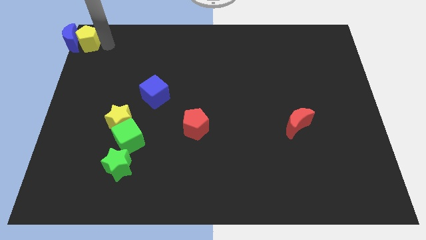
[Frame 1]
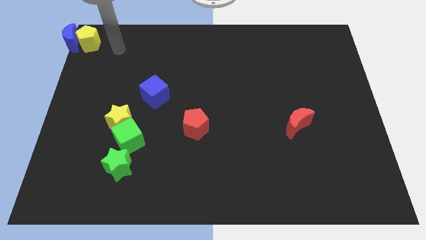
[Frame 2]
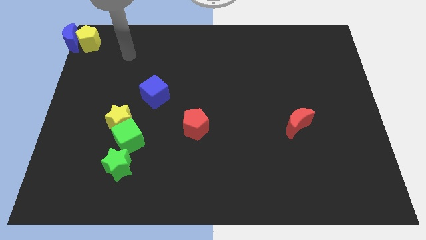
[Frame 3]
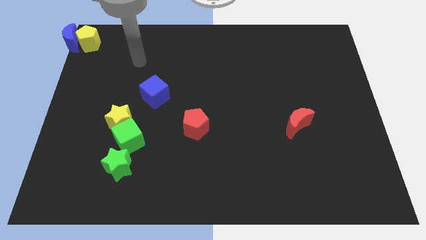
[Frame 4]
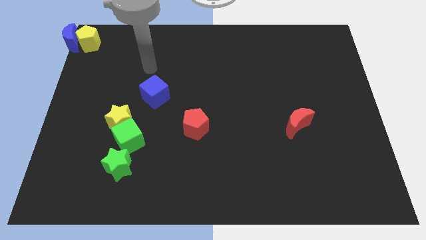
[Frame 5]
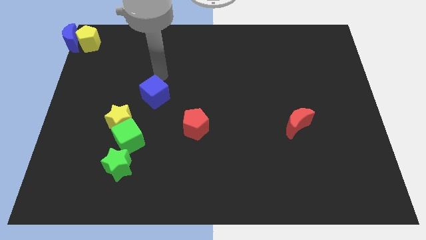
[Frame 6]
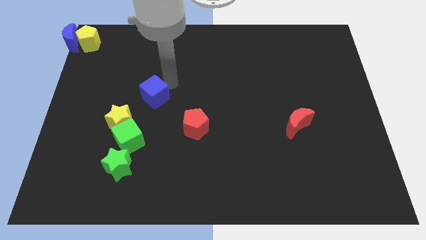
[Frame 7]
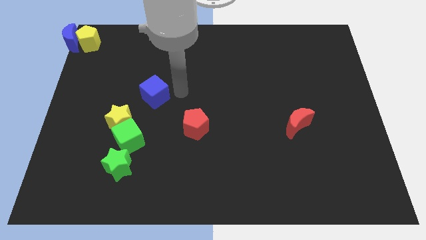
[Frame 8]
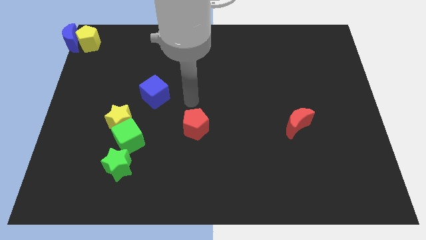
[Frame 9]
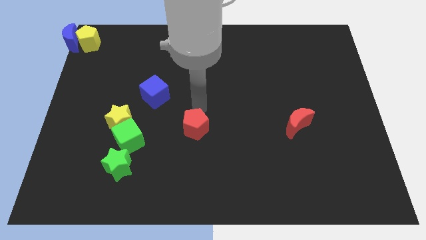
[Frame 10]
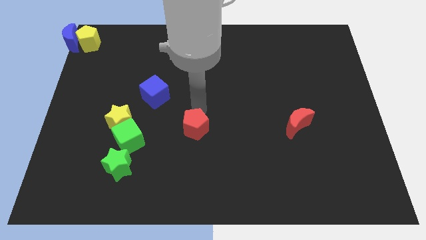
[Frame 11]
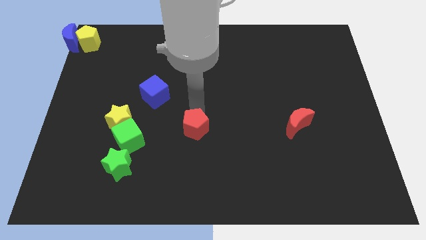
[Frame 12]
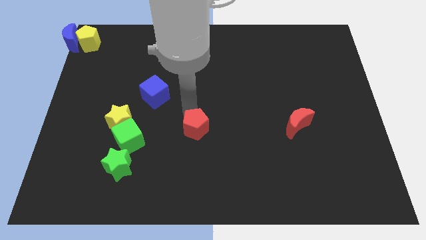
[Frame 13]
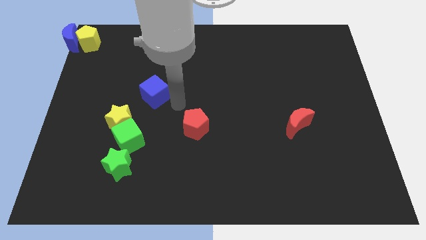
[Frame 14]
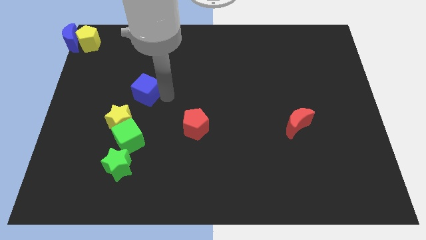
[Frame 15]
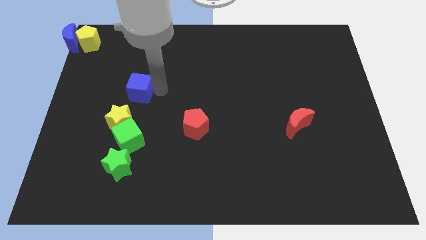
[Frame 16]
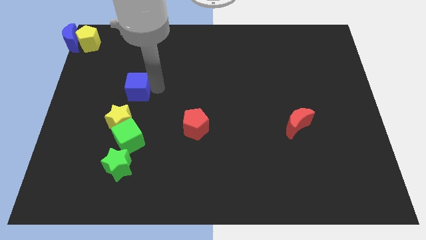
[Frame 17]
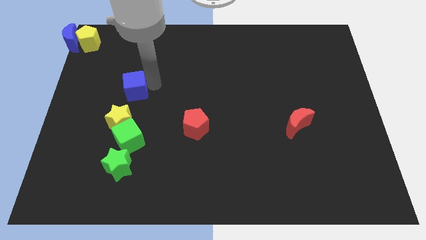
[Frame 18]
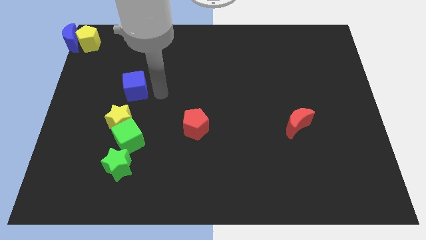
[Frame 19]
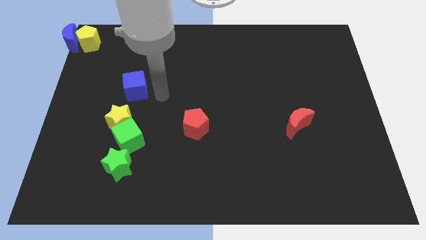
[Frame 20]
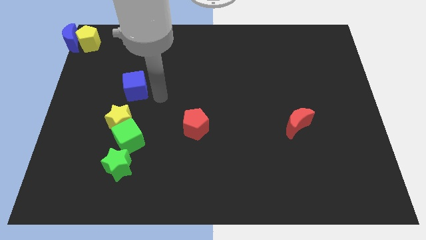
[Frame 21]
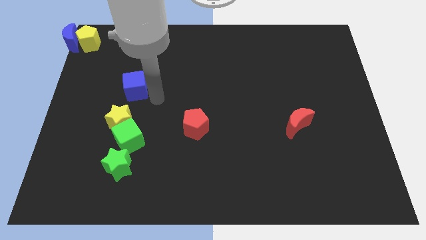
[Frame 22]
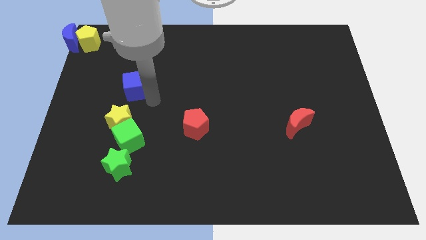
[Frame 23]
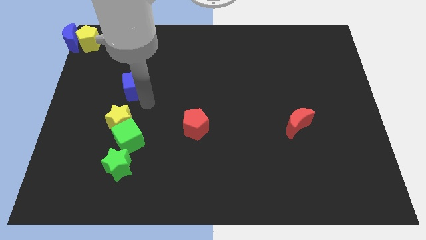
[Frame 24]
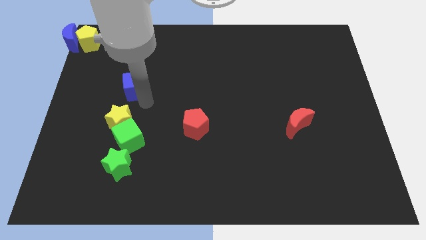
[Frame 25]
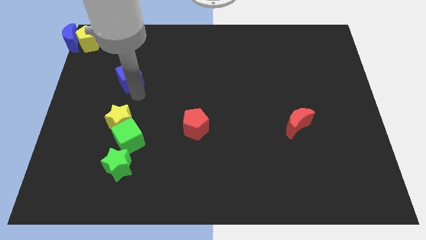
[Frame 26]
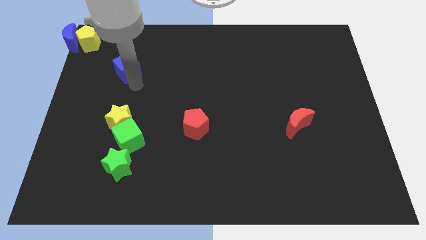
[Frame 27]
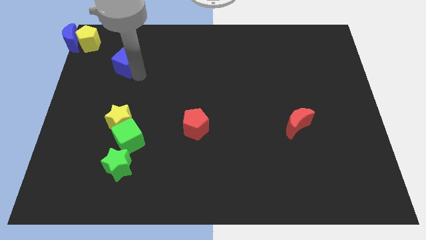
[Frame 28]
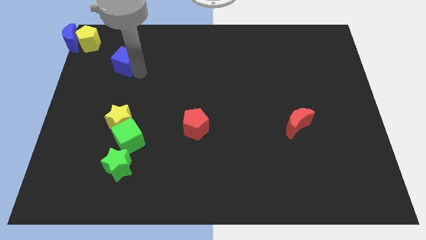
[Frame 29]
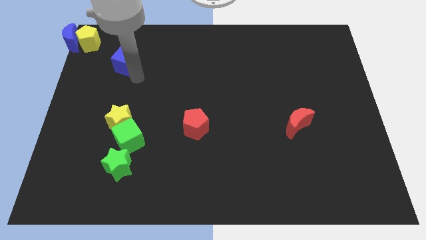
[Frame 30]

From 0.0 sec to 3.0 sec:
place the blue cube diagonally to the yellow pentagon

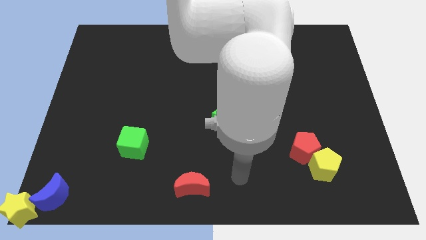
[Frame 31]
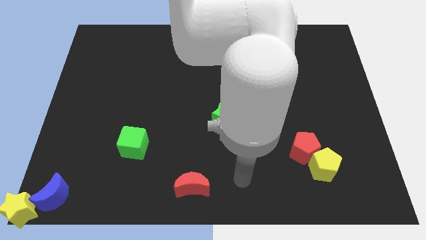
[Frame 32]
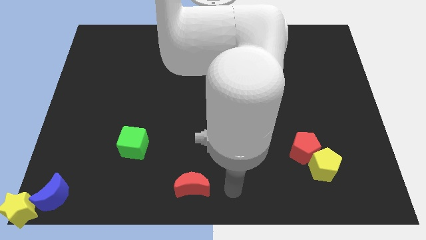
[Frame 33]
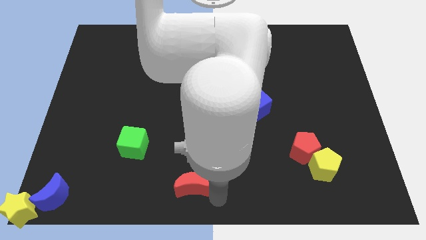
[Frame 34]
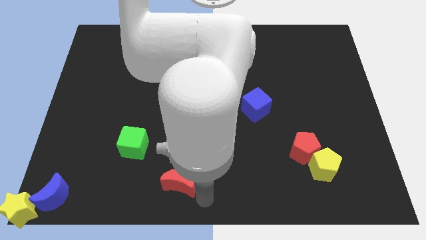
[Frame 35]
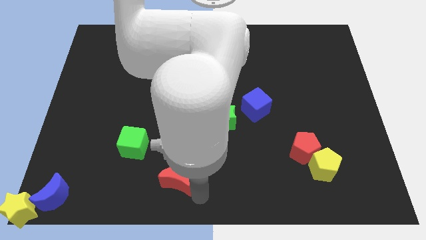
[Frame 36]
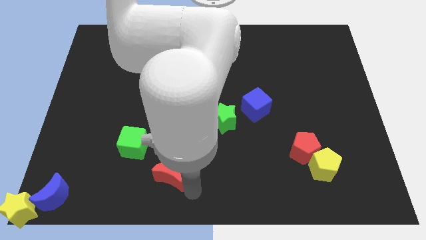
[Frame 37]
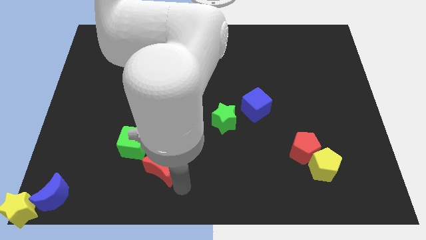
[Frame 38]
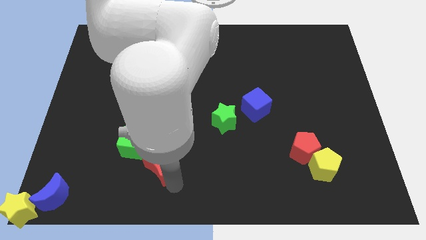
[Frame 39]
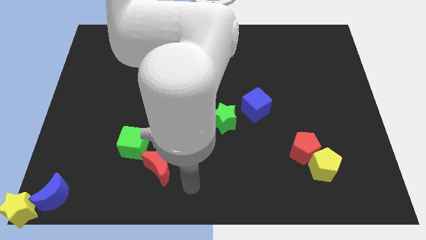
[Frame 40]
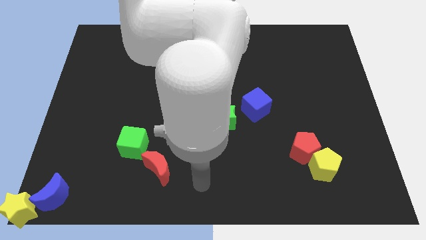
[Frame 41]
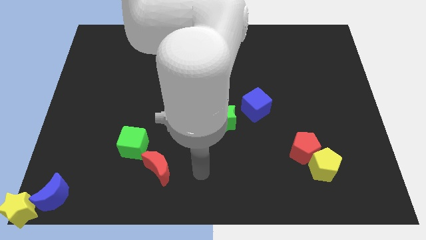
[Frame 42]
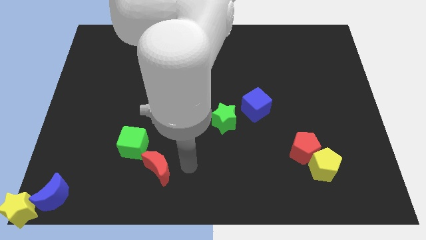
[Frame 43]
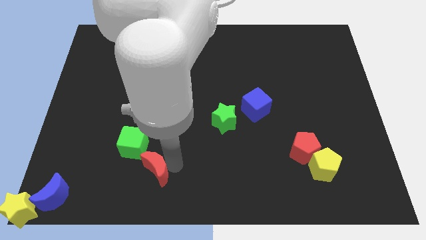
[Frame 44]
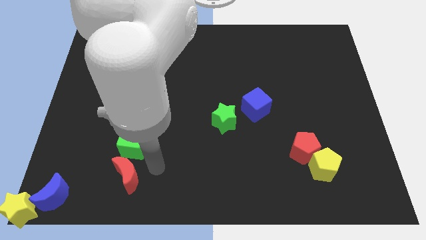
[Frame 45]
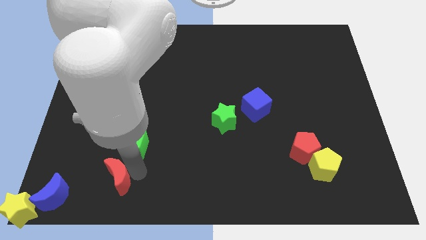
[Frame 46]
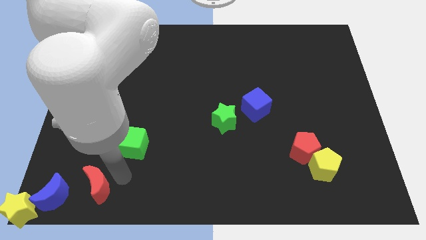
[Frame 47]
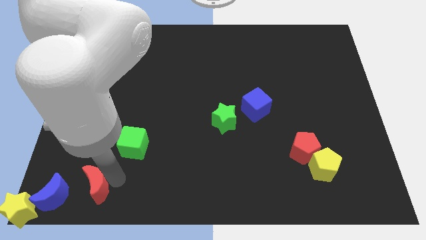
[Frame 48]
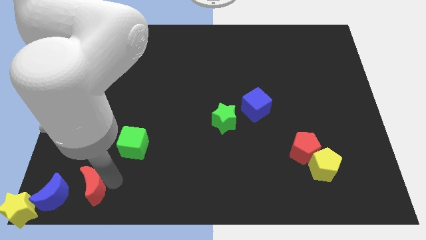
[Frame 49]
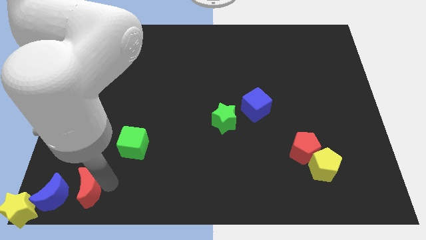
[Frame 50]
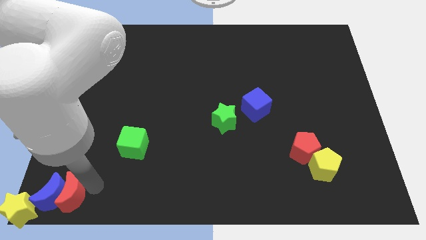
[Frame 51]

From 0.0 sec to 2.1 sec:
place the red moon diagonally bottom left to the green cube

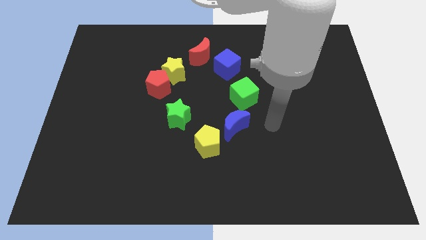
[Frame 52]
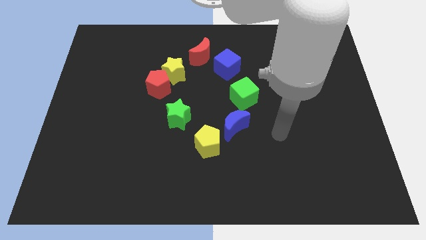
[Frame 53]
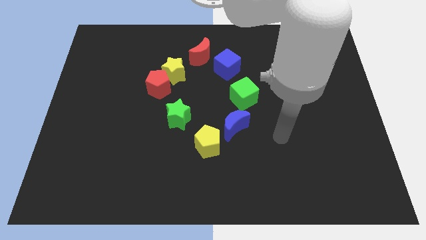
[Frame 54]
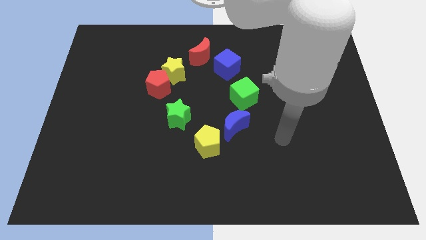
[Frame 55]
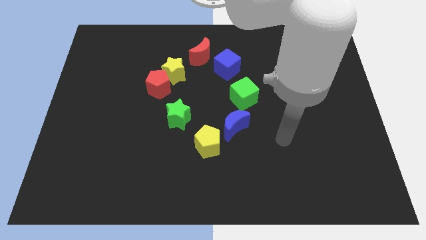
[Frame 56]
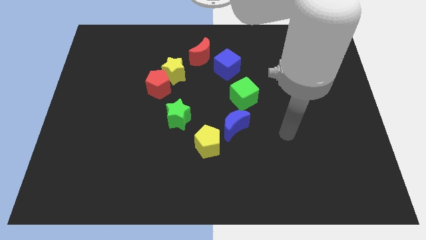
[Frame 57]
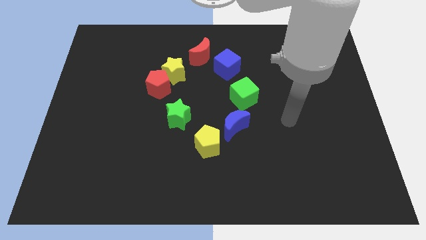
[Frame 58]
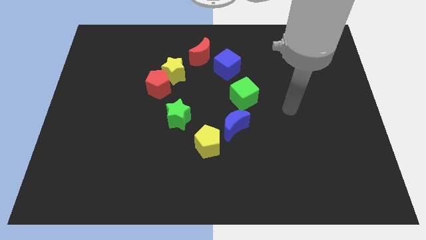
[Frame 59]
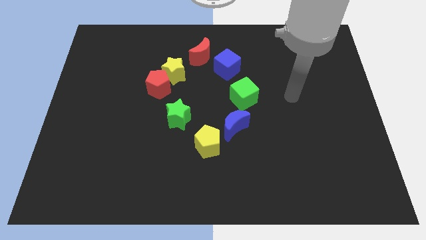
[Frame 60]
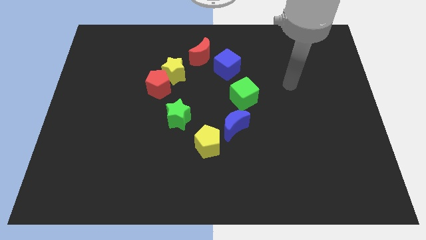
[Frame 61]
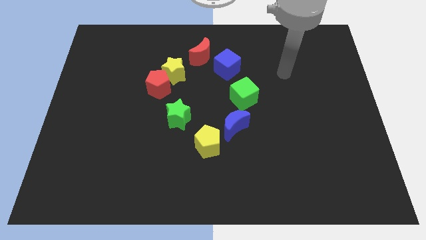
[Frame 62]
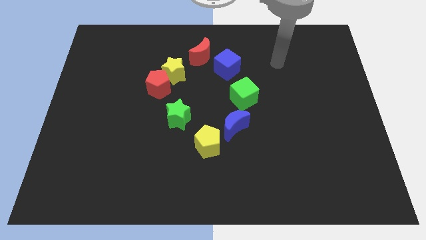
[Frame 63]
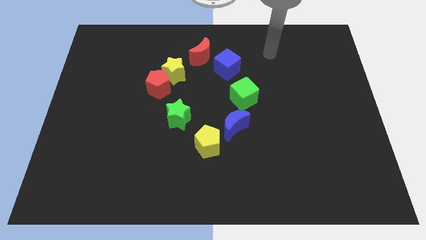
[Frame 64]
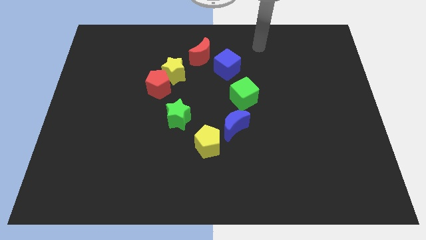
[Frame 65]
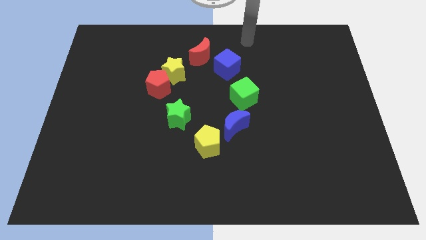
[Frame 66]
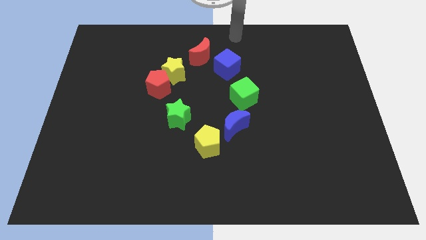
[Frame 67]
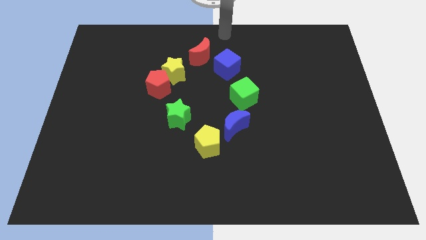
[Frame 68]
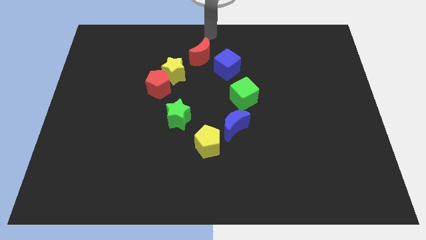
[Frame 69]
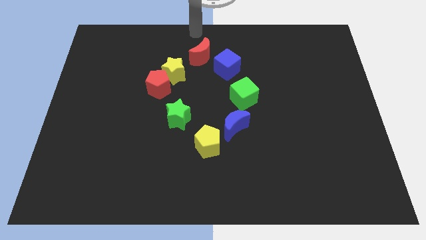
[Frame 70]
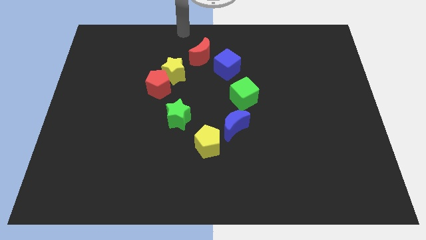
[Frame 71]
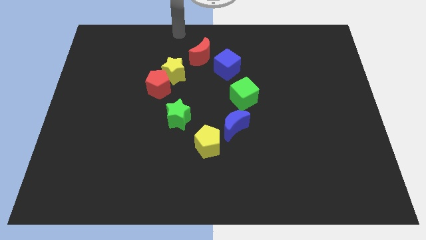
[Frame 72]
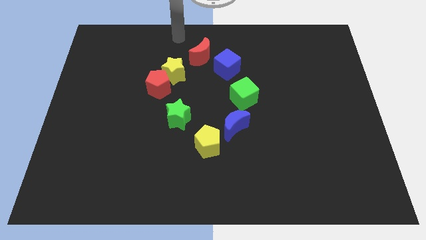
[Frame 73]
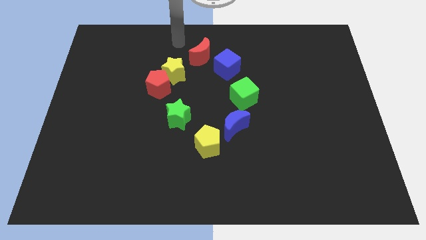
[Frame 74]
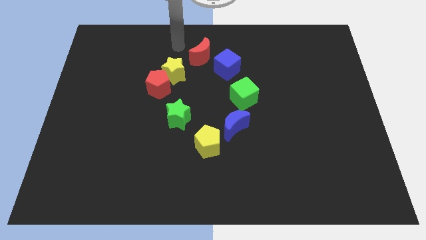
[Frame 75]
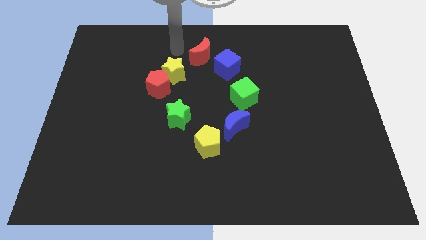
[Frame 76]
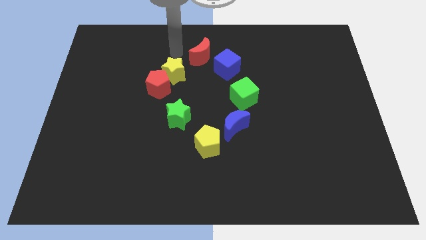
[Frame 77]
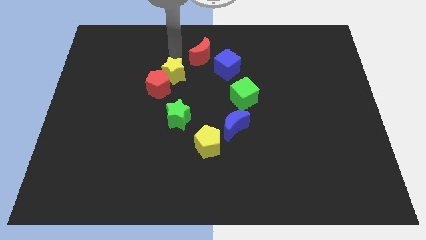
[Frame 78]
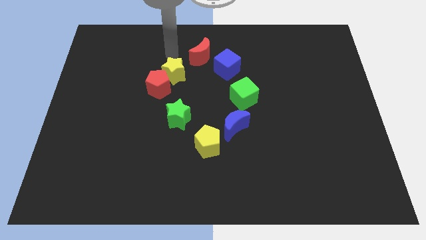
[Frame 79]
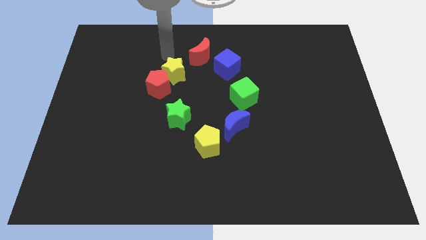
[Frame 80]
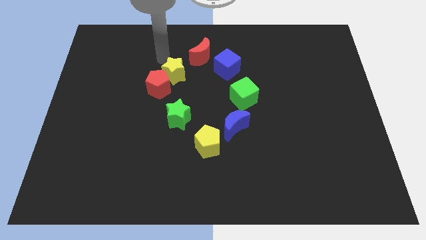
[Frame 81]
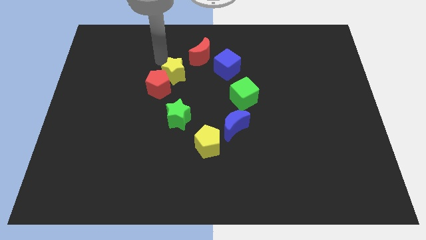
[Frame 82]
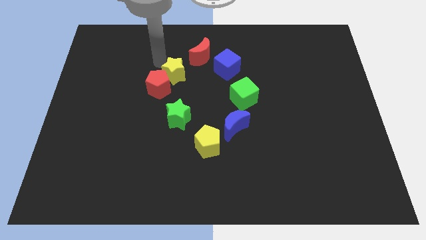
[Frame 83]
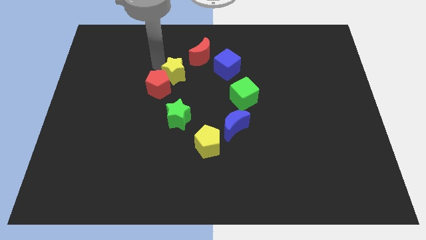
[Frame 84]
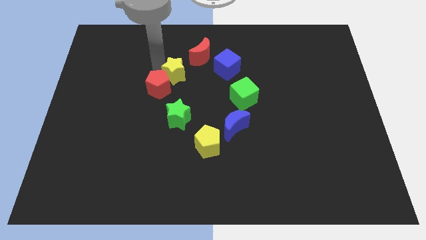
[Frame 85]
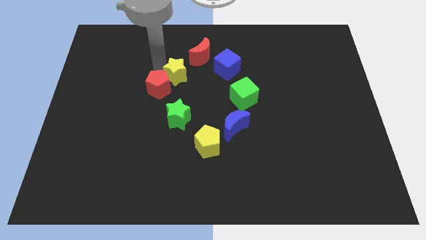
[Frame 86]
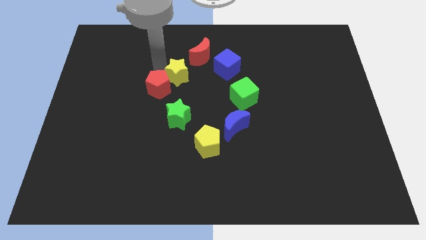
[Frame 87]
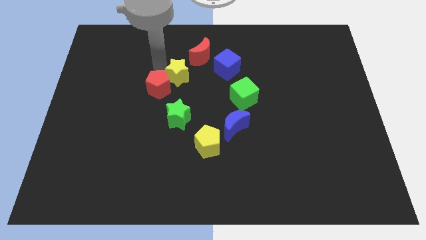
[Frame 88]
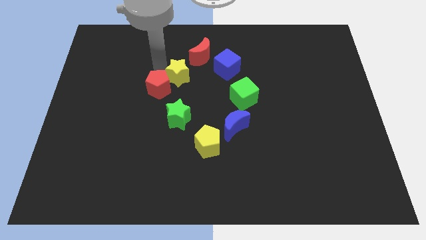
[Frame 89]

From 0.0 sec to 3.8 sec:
slightly push the yellow star above the red pentagon
